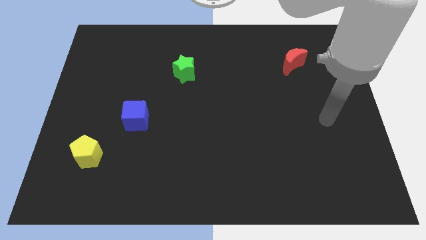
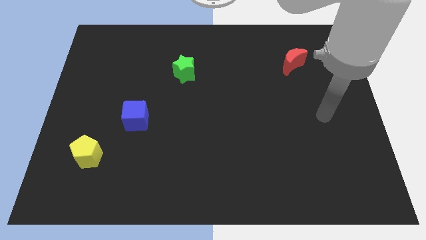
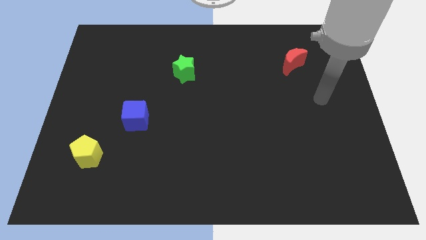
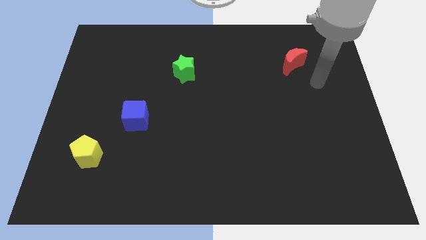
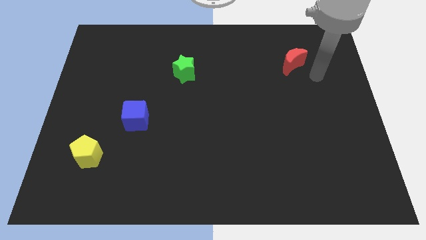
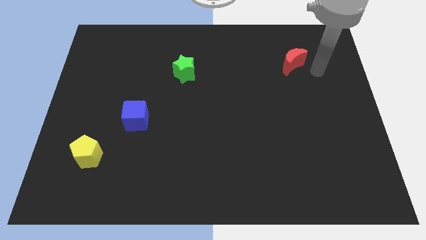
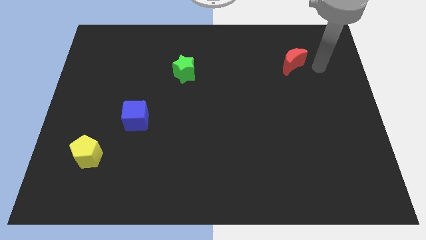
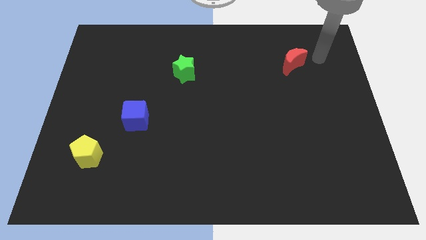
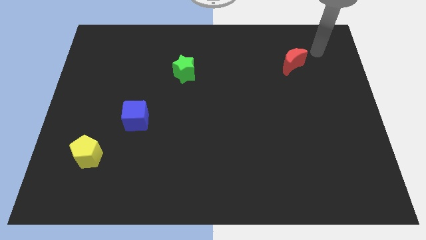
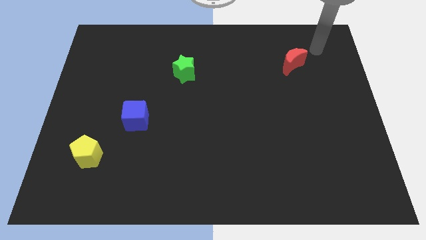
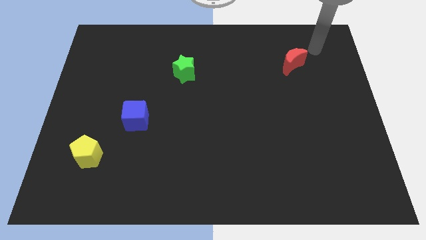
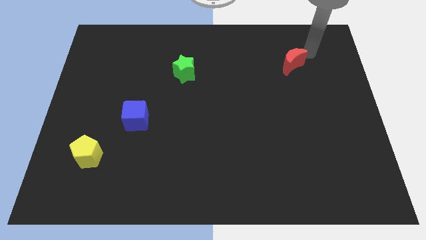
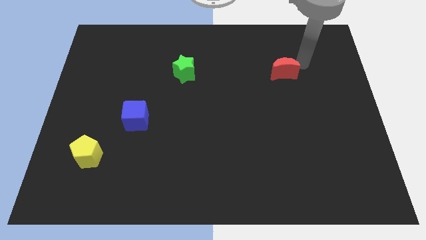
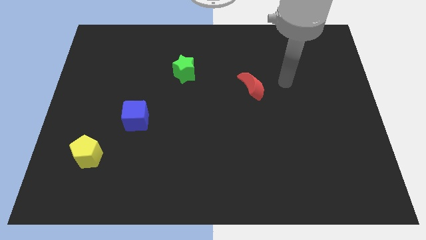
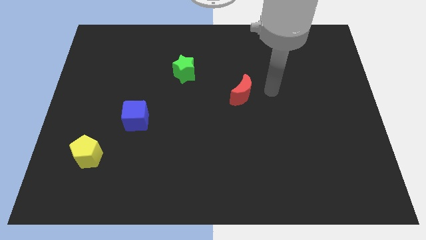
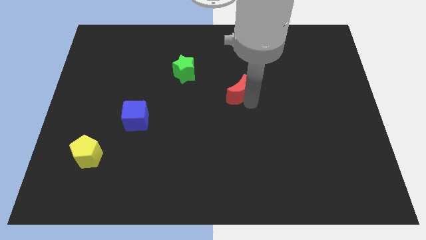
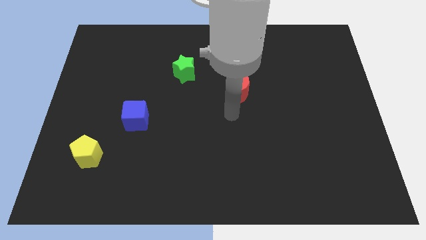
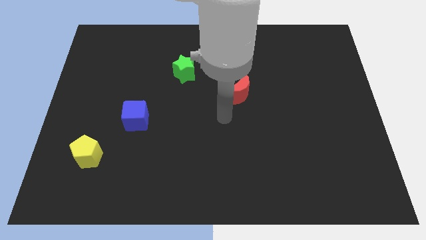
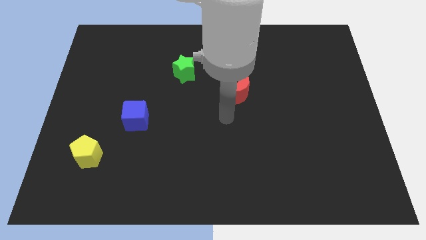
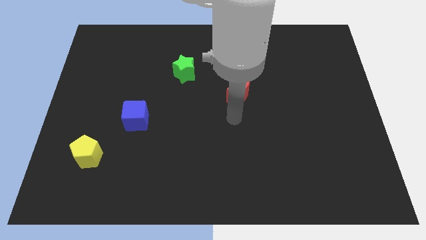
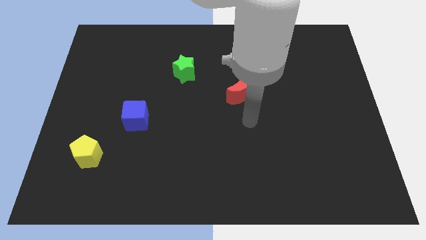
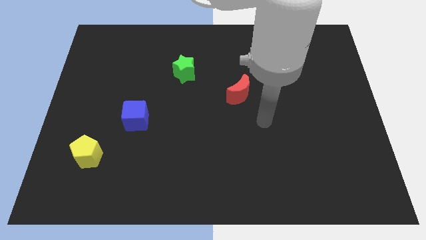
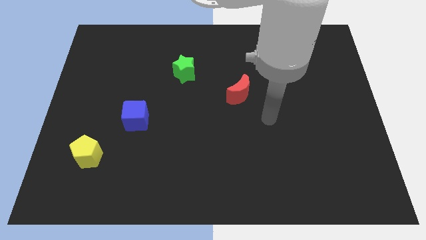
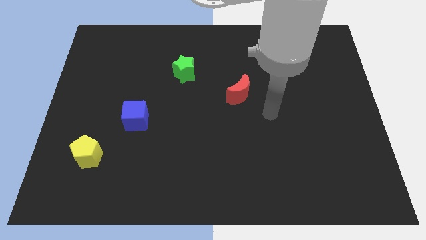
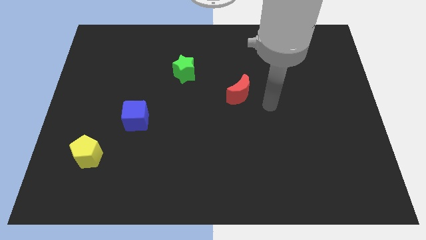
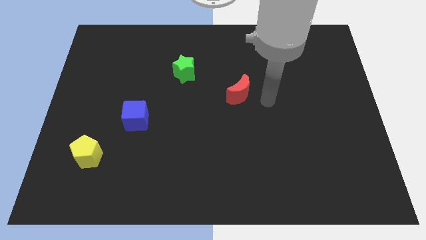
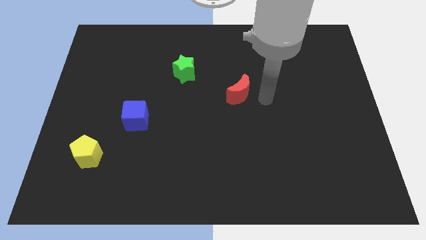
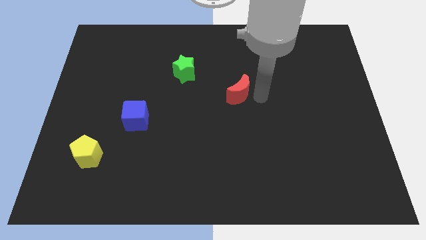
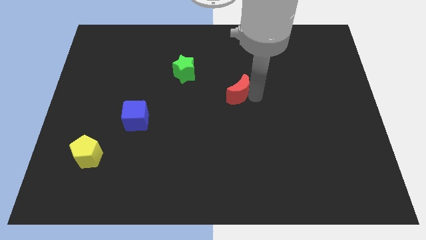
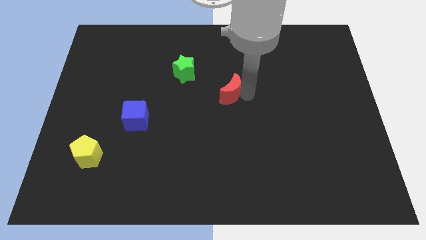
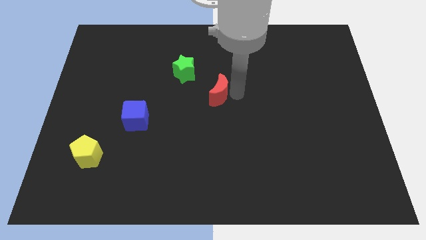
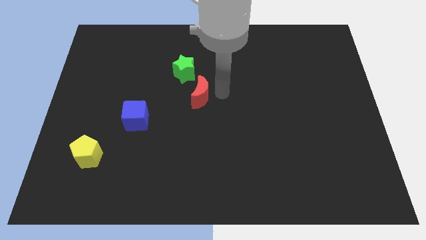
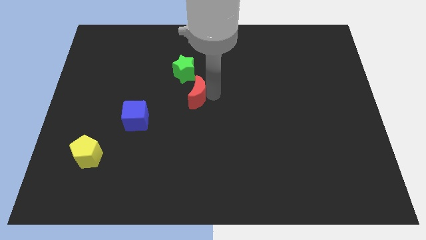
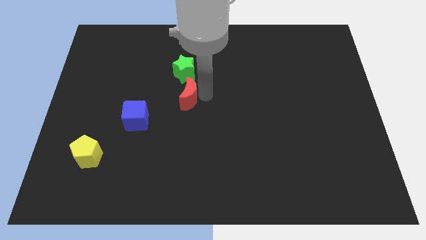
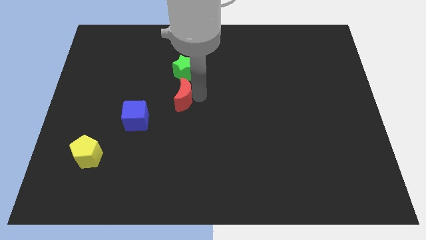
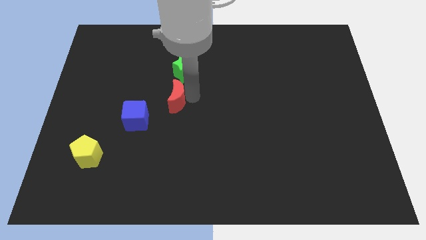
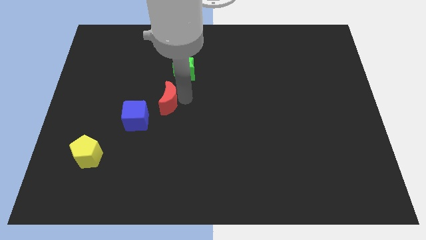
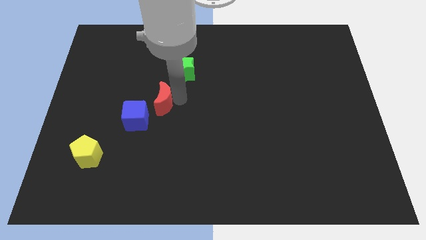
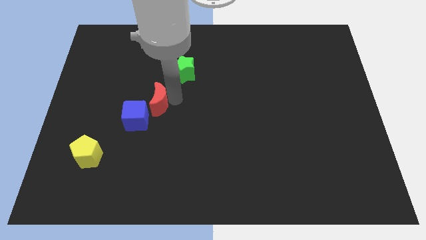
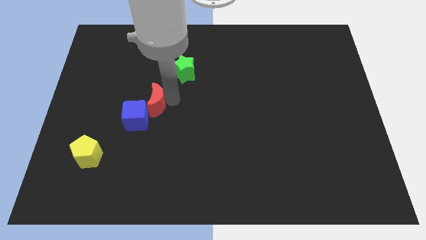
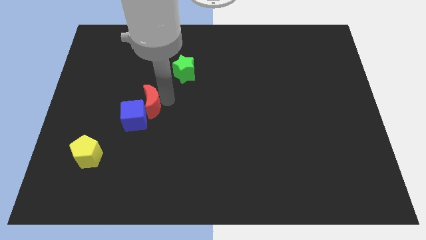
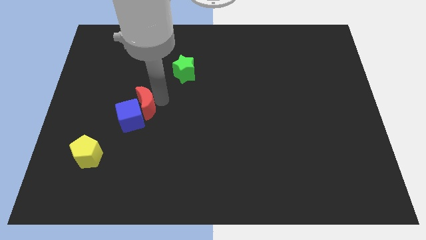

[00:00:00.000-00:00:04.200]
slide the moon to the blue cube

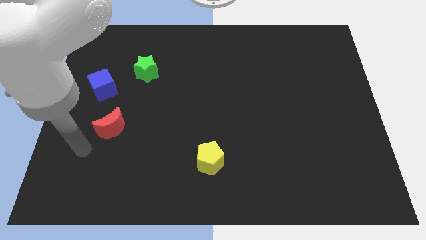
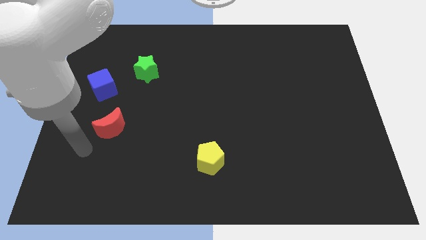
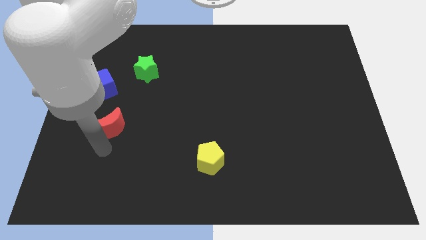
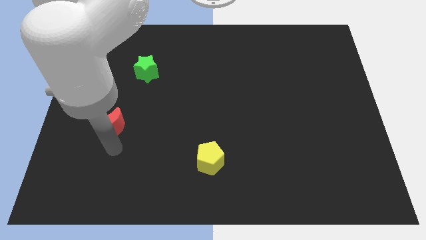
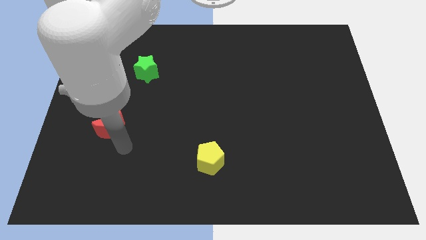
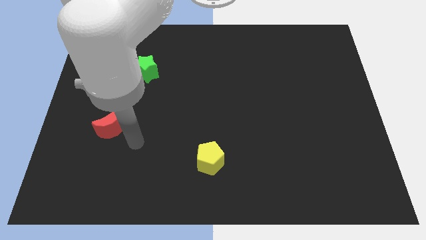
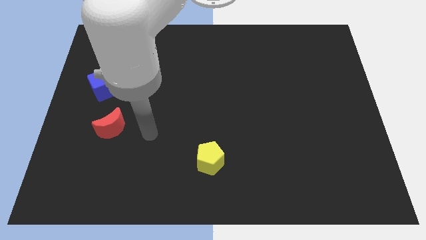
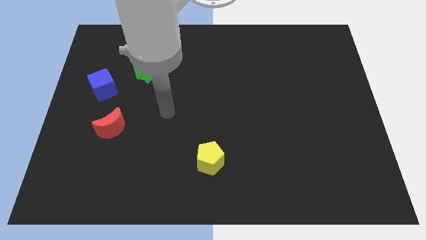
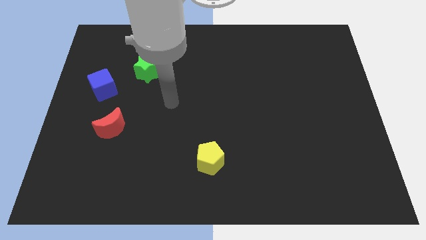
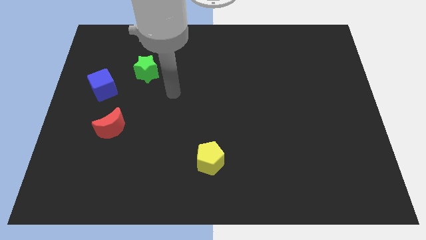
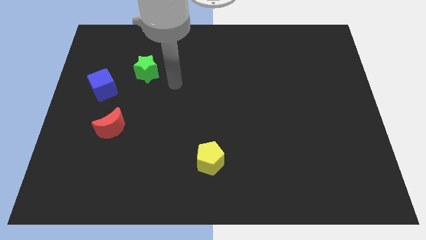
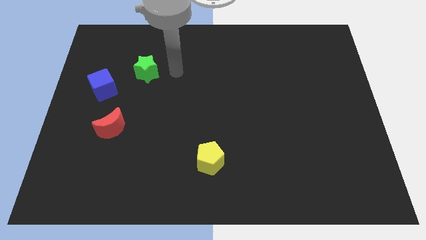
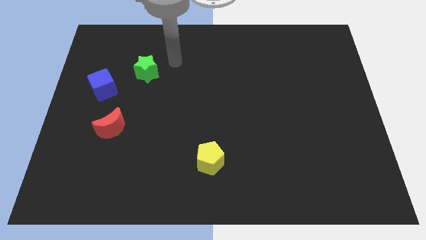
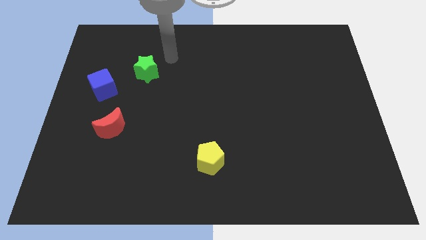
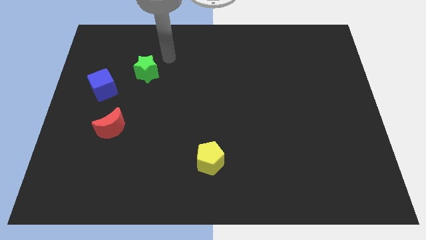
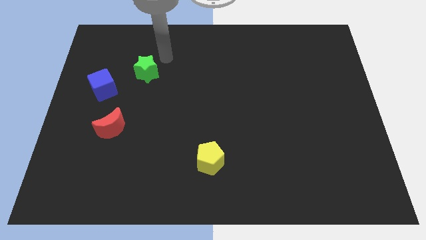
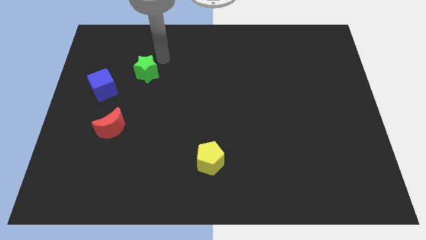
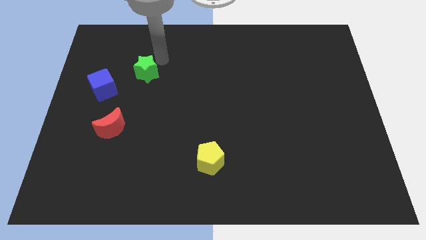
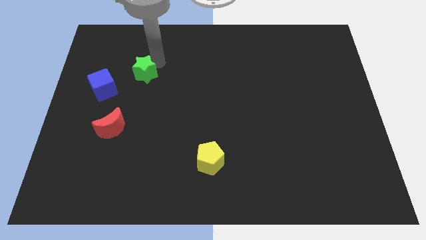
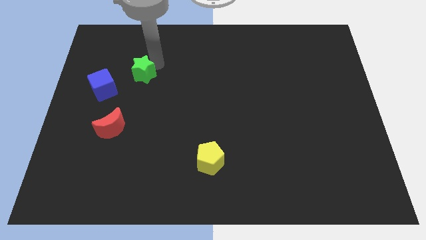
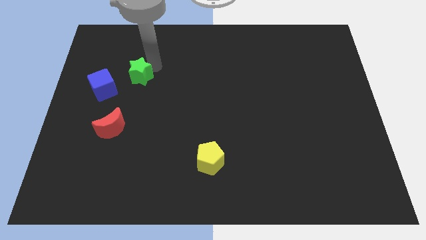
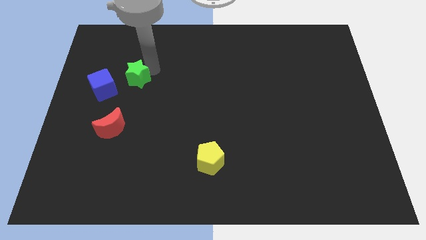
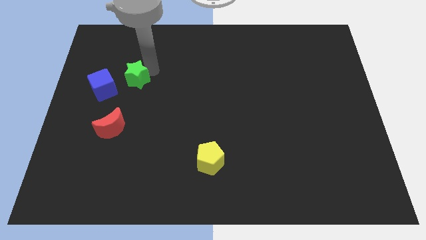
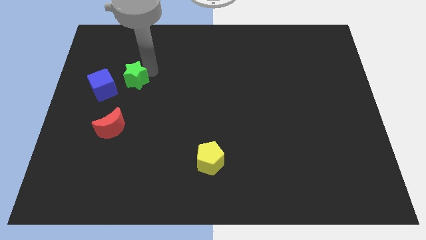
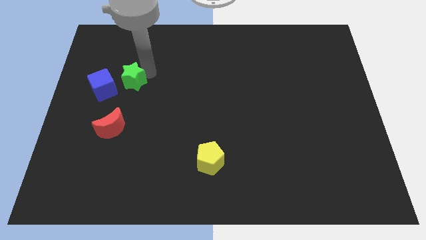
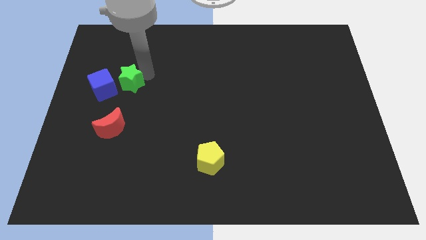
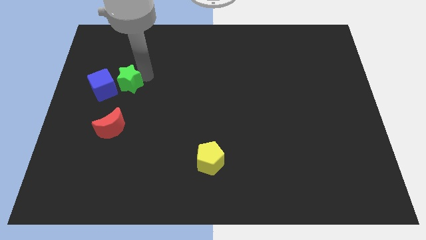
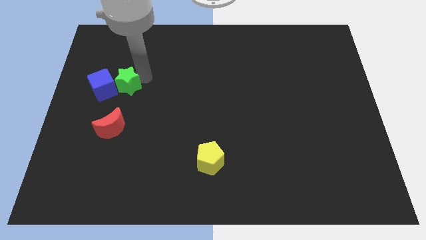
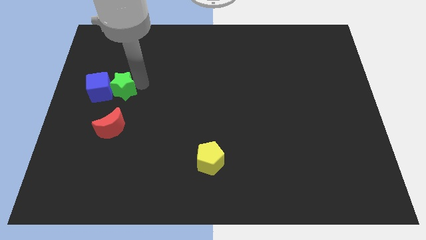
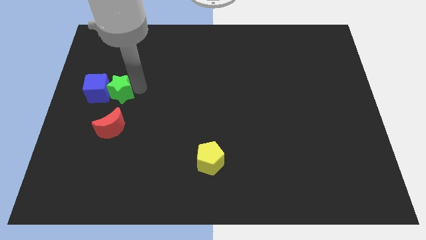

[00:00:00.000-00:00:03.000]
slide the star close to the blue cube

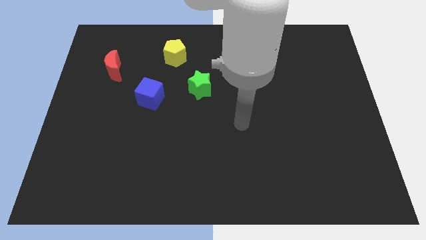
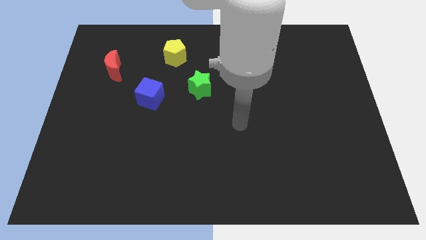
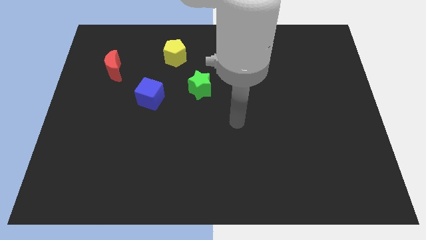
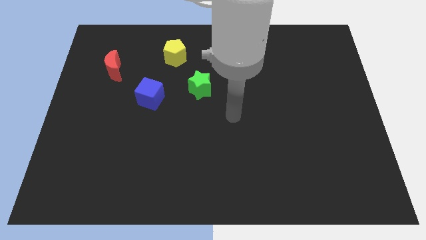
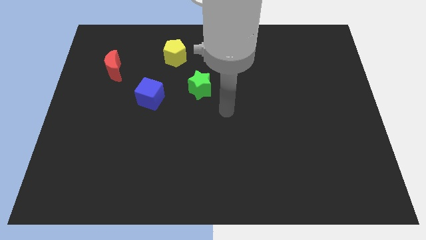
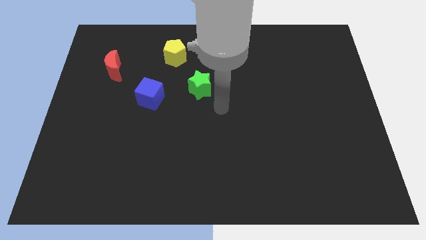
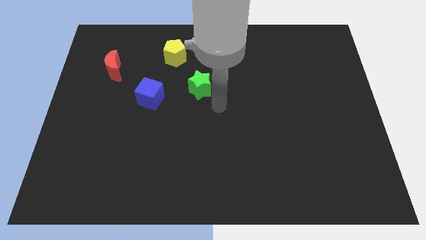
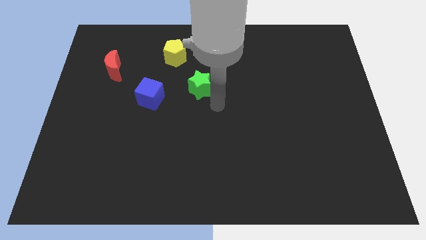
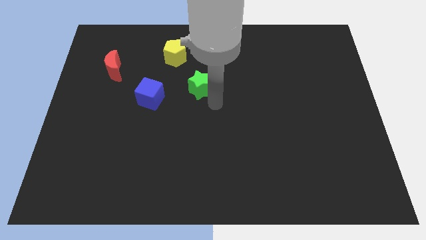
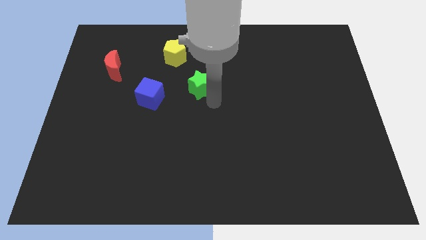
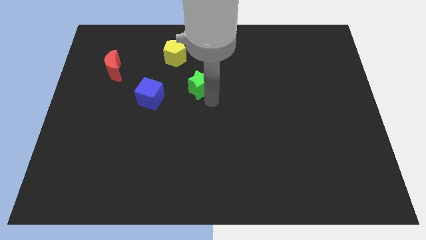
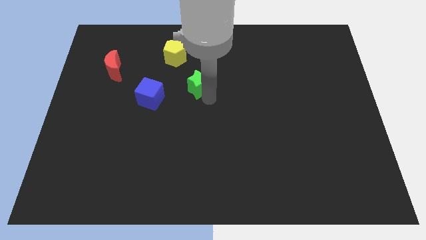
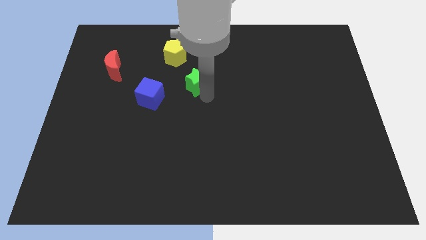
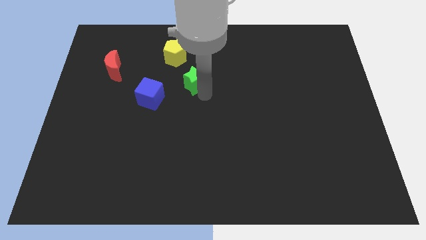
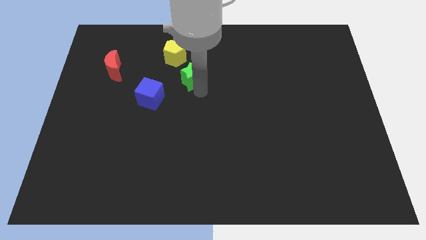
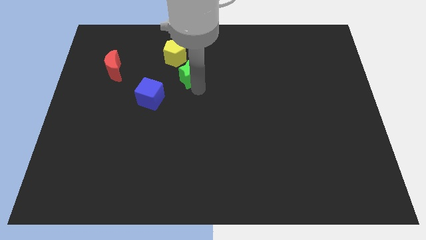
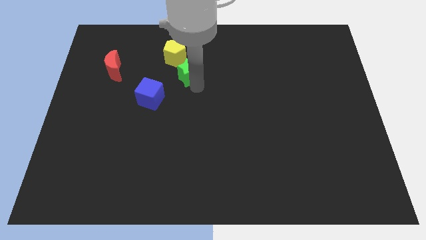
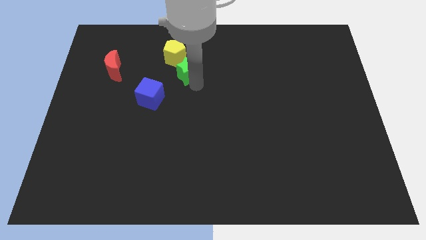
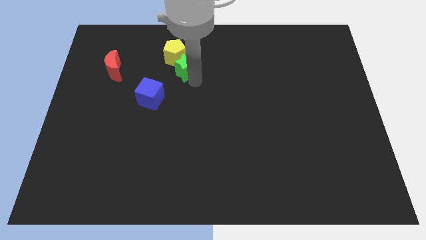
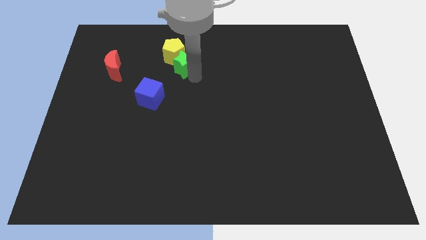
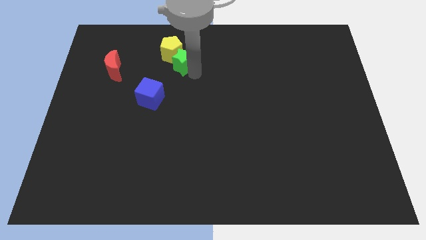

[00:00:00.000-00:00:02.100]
move the green block towards the yellow block
